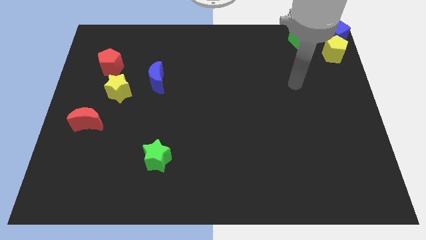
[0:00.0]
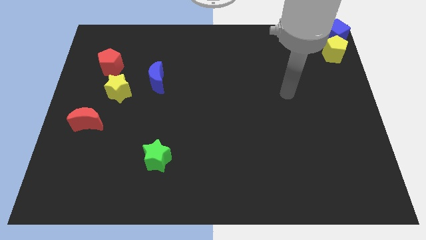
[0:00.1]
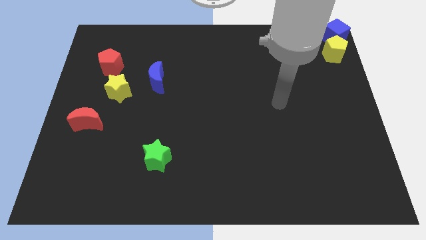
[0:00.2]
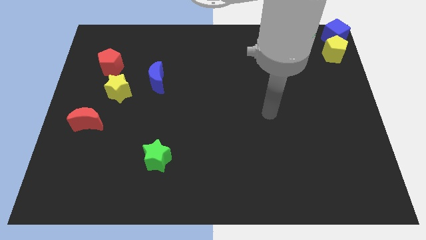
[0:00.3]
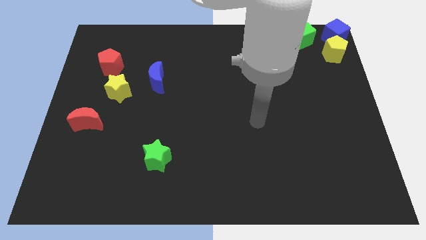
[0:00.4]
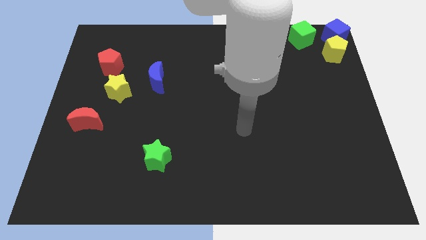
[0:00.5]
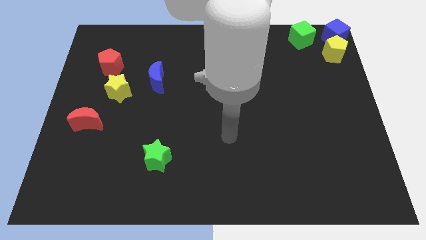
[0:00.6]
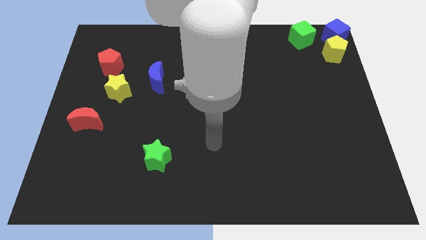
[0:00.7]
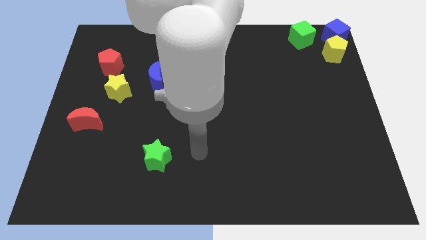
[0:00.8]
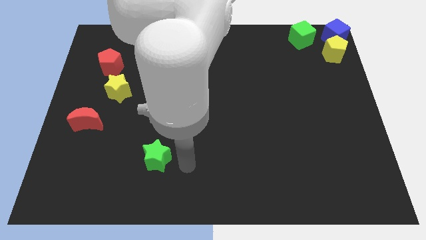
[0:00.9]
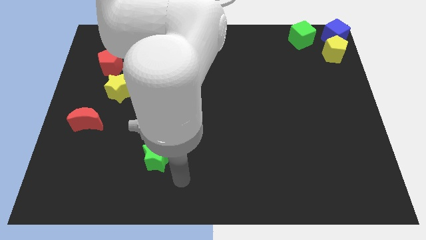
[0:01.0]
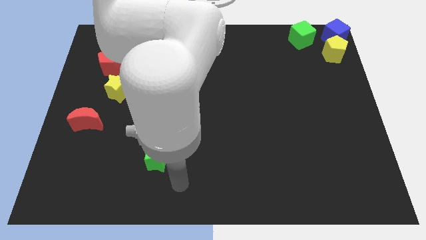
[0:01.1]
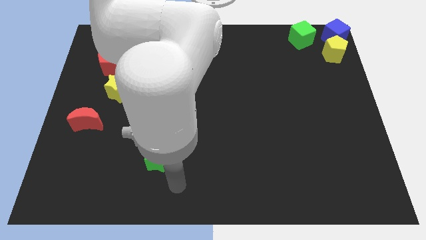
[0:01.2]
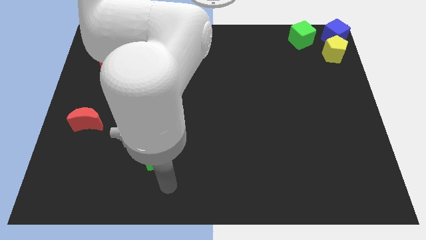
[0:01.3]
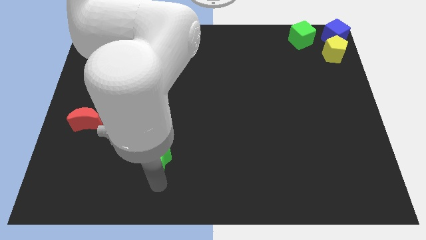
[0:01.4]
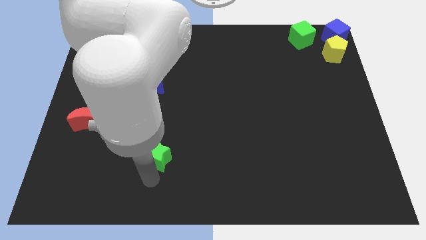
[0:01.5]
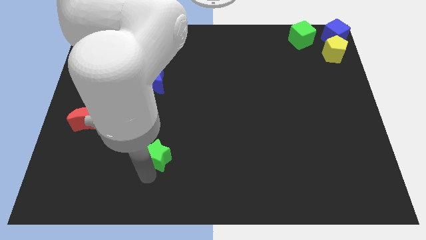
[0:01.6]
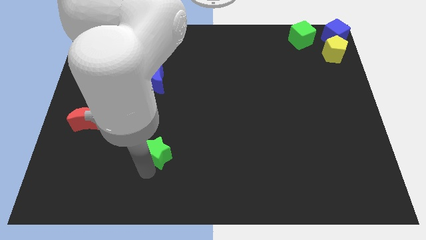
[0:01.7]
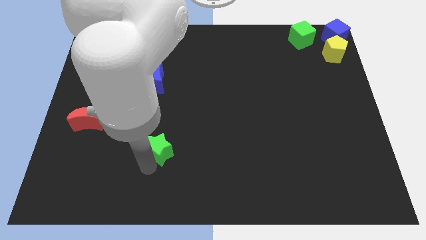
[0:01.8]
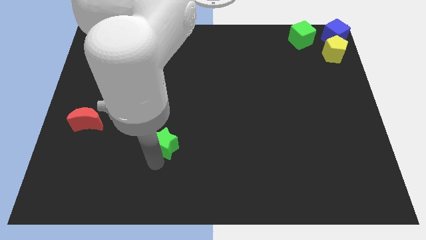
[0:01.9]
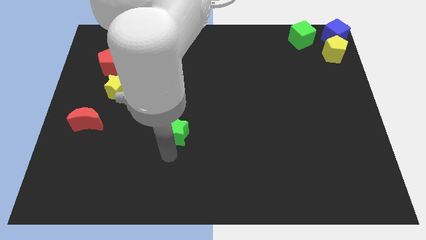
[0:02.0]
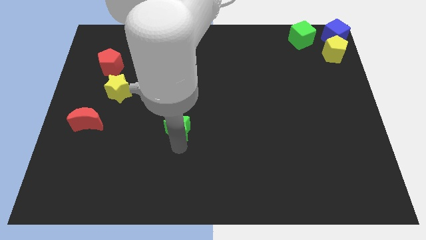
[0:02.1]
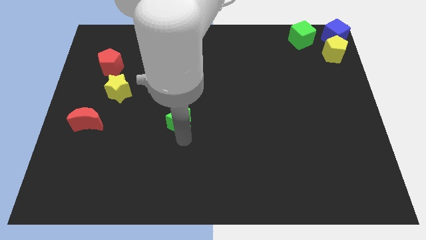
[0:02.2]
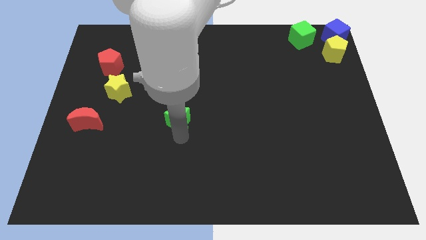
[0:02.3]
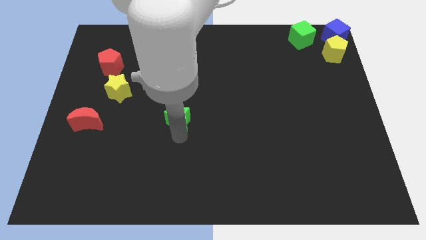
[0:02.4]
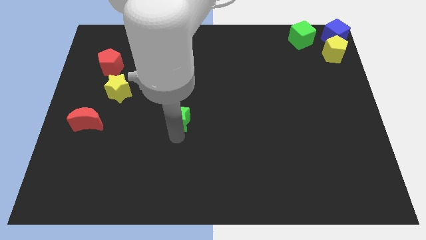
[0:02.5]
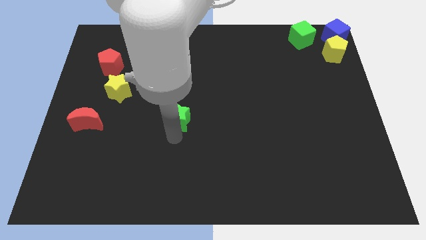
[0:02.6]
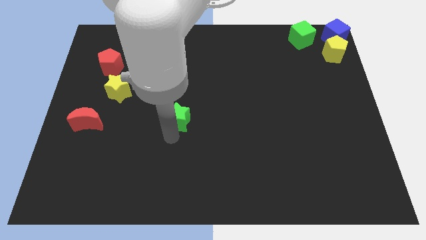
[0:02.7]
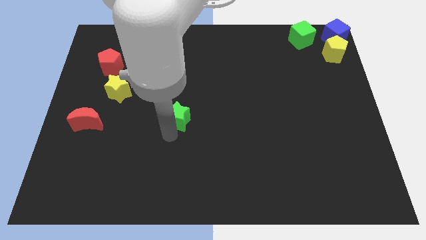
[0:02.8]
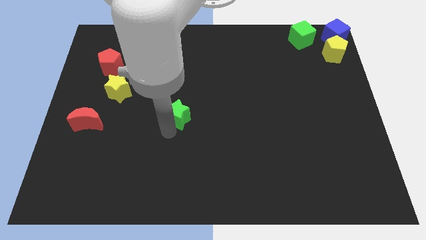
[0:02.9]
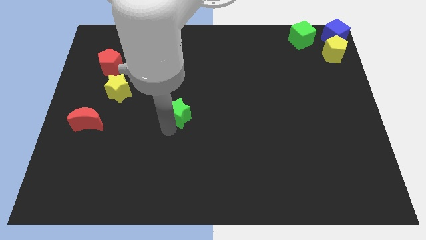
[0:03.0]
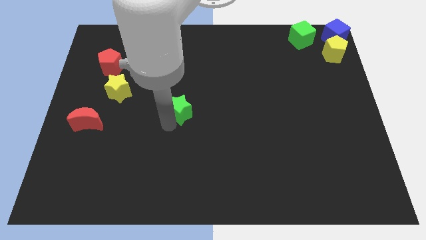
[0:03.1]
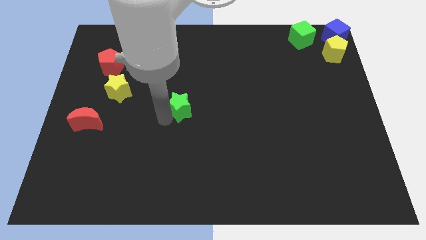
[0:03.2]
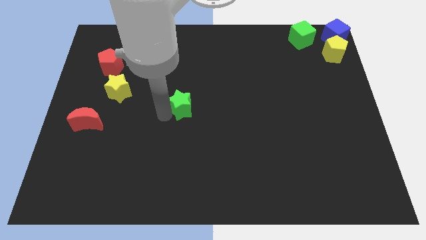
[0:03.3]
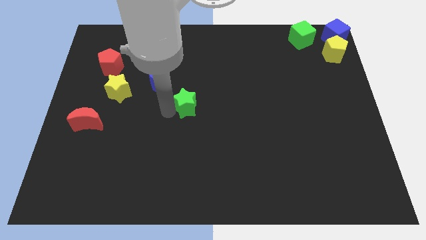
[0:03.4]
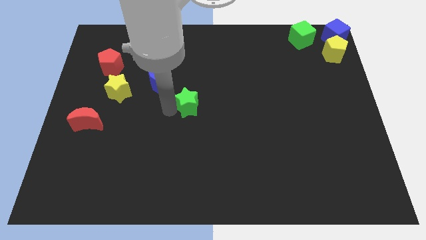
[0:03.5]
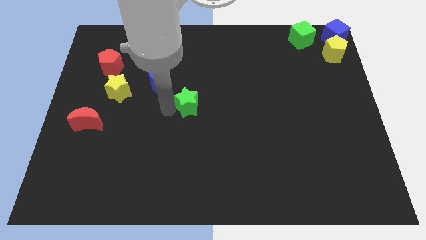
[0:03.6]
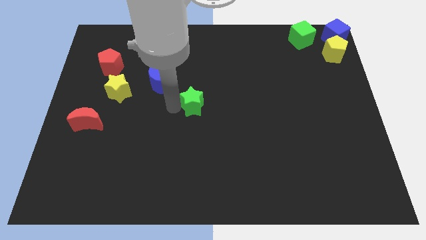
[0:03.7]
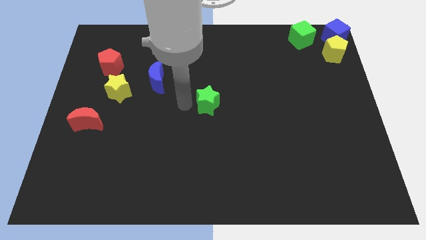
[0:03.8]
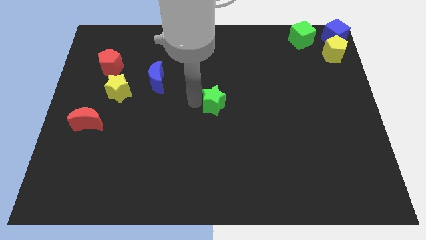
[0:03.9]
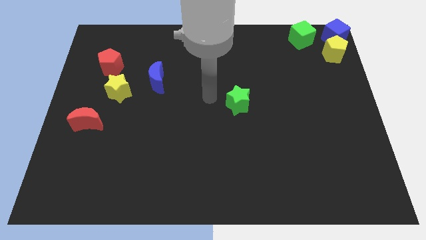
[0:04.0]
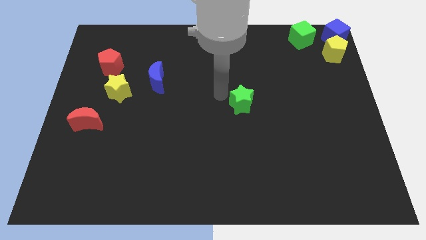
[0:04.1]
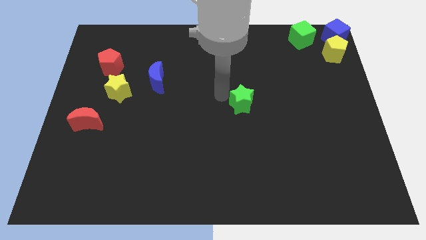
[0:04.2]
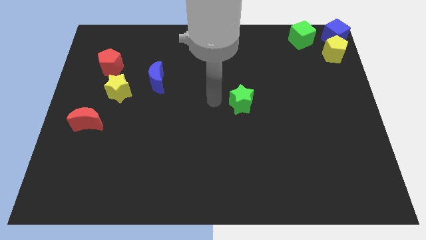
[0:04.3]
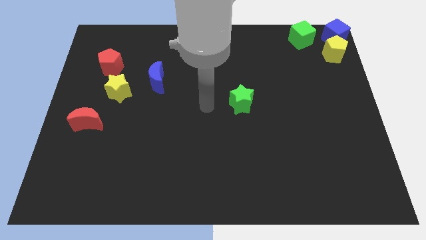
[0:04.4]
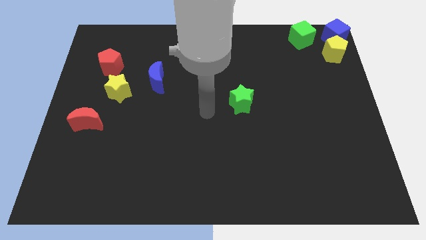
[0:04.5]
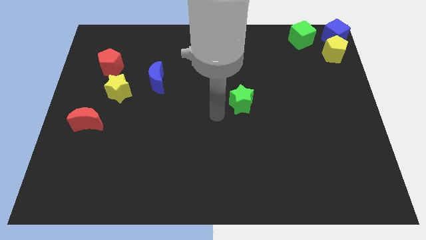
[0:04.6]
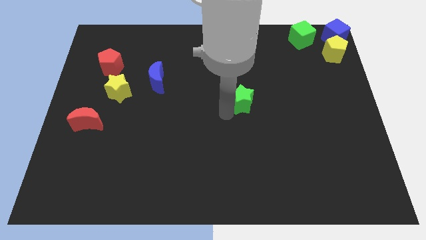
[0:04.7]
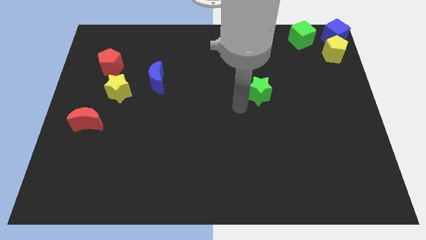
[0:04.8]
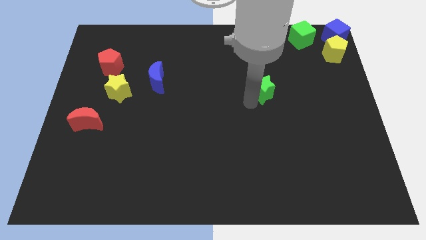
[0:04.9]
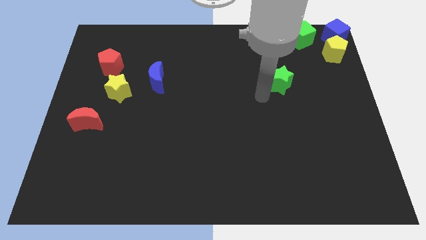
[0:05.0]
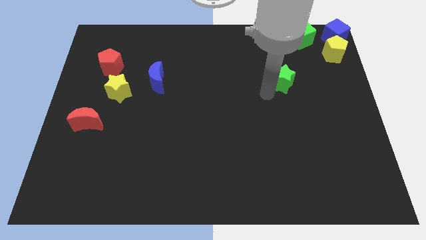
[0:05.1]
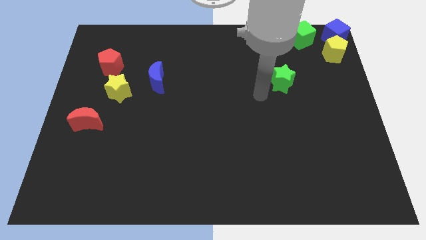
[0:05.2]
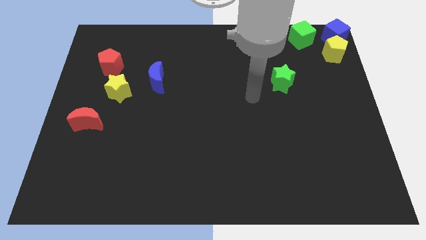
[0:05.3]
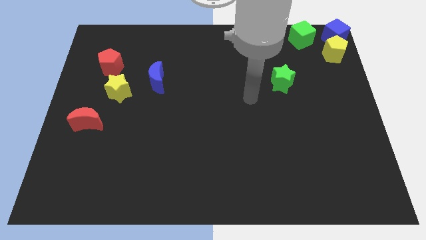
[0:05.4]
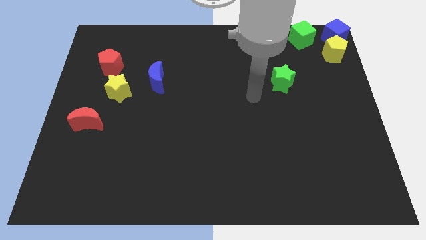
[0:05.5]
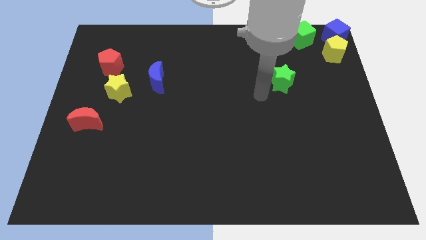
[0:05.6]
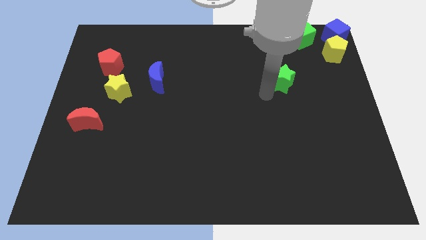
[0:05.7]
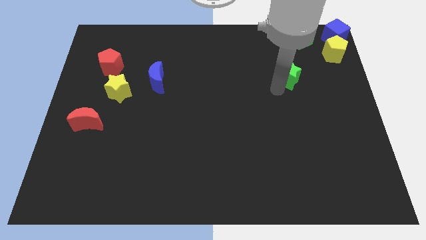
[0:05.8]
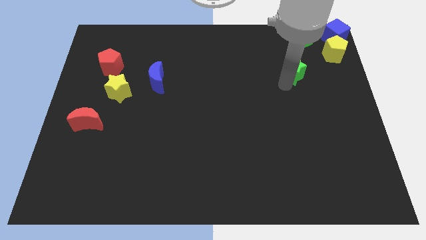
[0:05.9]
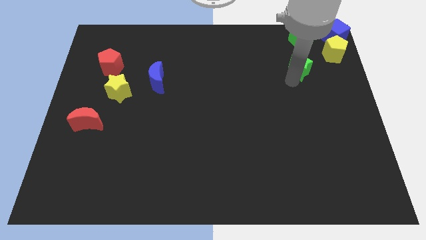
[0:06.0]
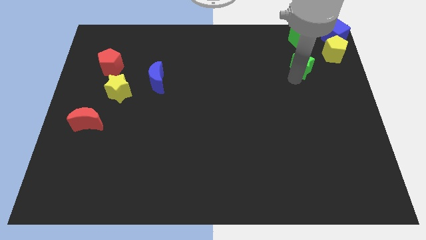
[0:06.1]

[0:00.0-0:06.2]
move the green star below the green cube

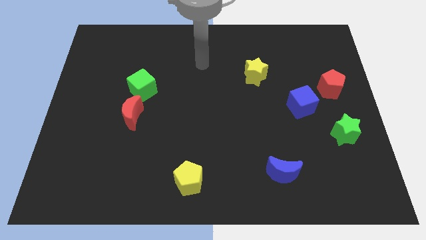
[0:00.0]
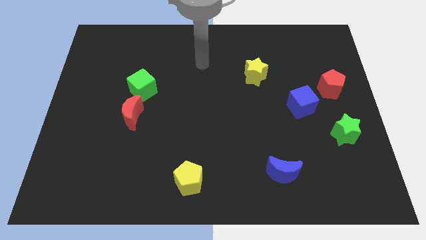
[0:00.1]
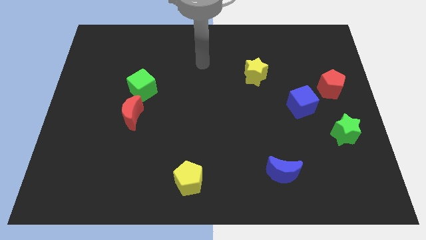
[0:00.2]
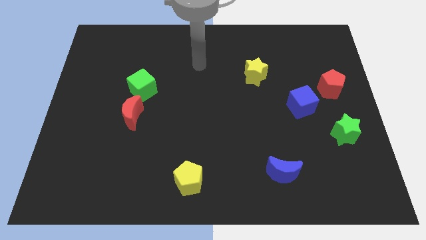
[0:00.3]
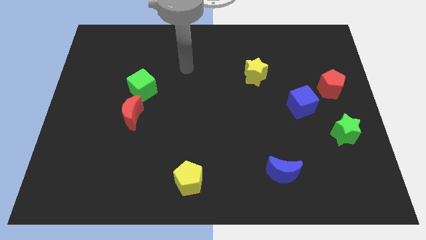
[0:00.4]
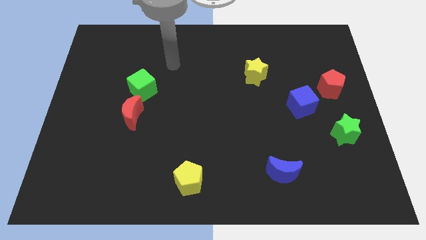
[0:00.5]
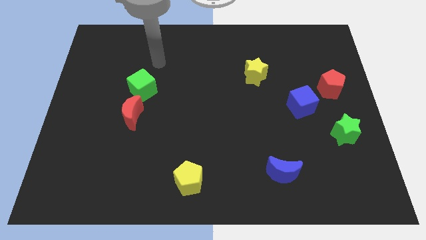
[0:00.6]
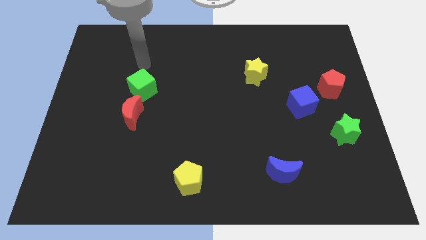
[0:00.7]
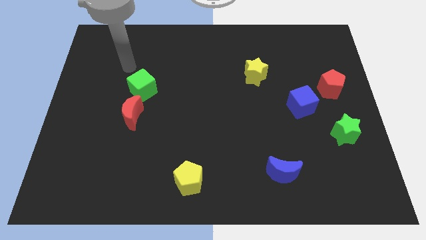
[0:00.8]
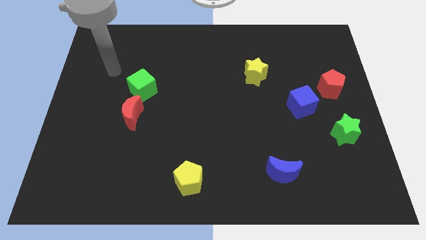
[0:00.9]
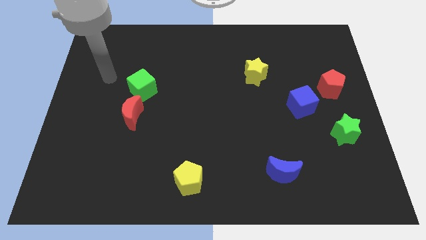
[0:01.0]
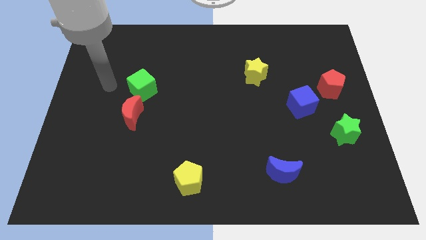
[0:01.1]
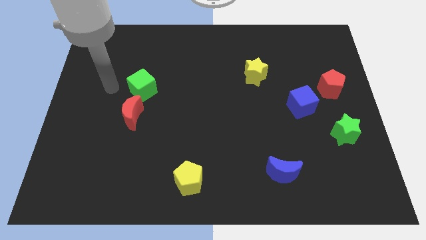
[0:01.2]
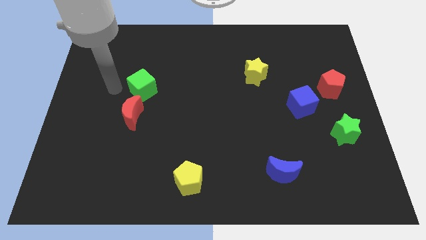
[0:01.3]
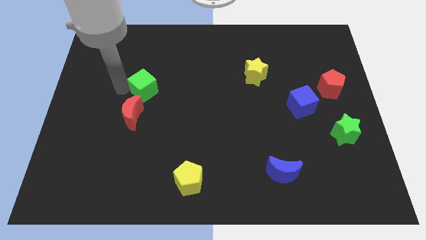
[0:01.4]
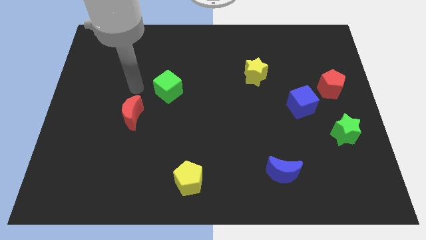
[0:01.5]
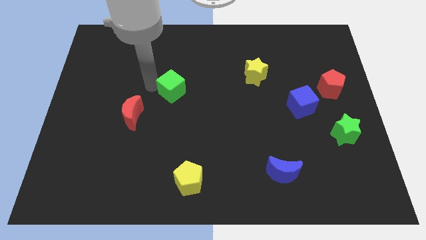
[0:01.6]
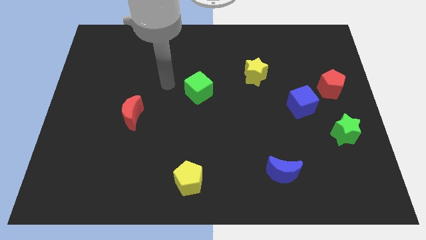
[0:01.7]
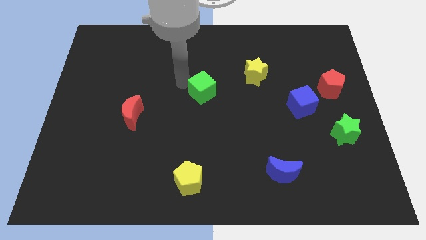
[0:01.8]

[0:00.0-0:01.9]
push the green cube on top of yellow pentagon

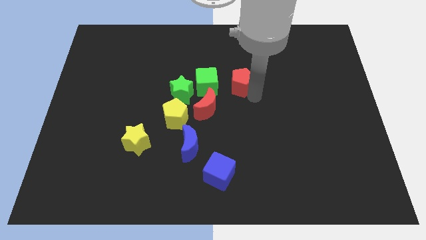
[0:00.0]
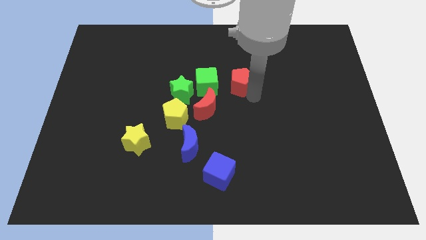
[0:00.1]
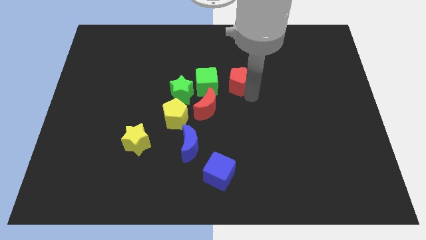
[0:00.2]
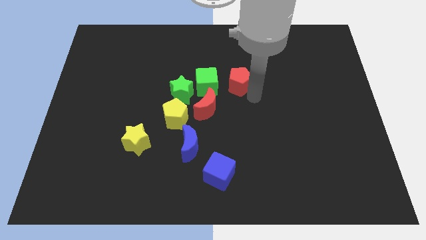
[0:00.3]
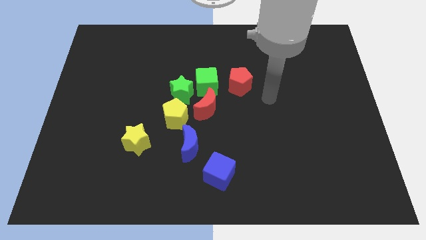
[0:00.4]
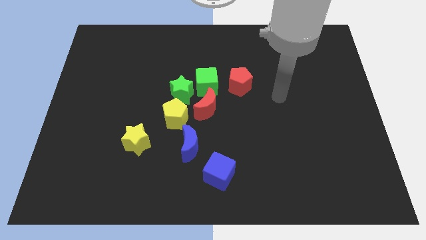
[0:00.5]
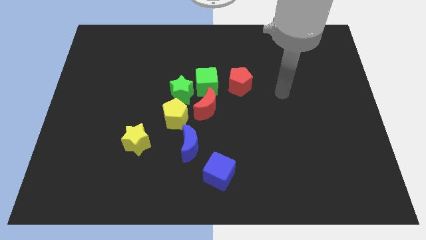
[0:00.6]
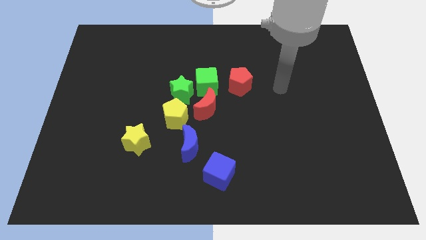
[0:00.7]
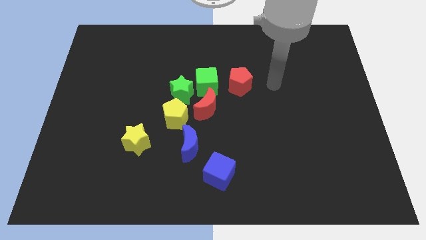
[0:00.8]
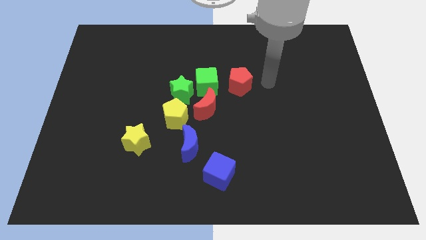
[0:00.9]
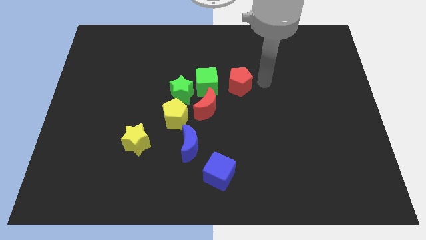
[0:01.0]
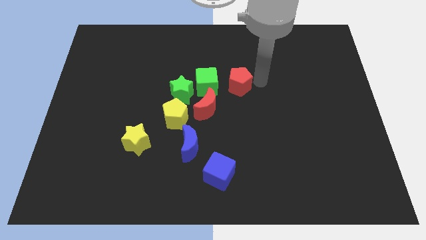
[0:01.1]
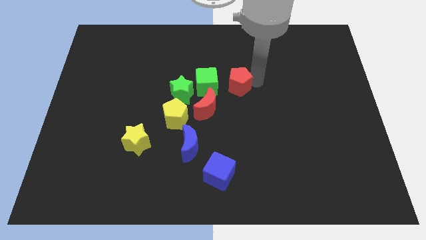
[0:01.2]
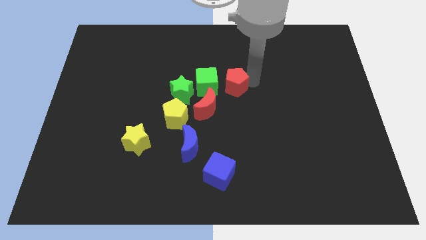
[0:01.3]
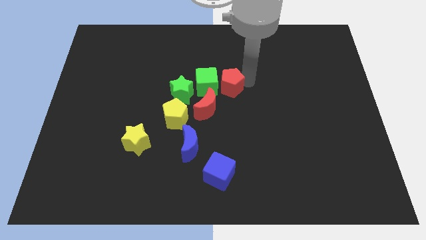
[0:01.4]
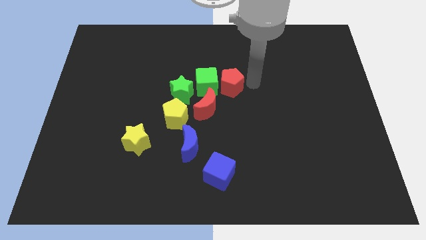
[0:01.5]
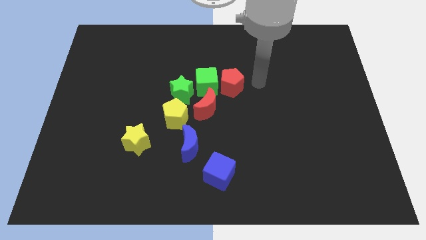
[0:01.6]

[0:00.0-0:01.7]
move the red pentagon right beside the green star
